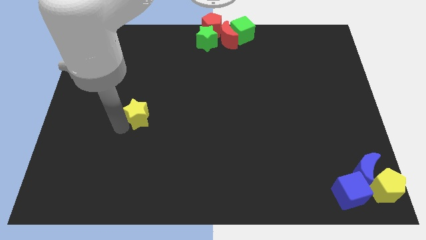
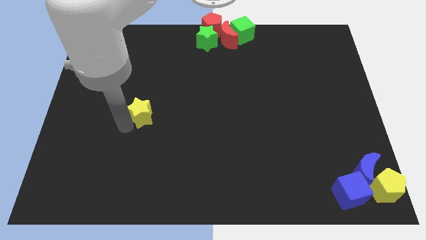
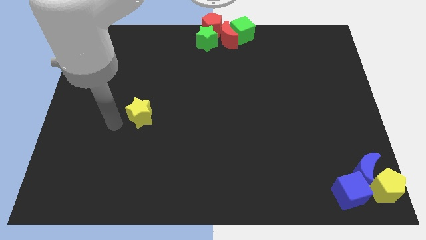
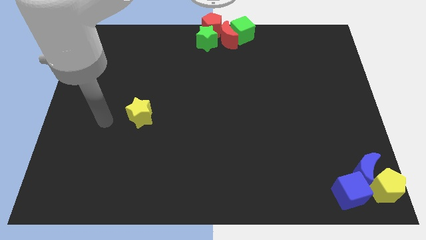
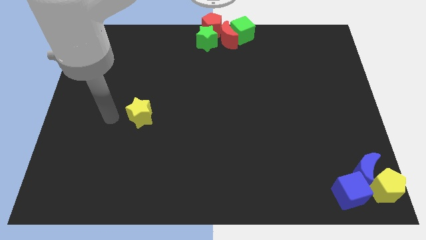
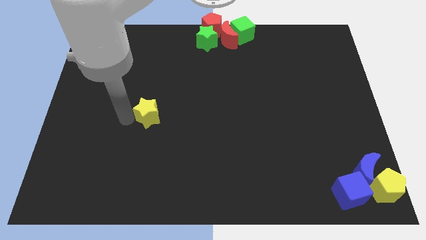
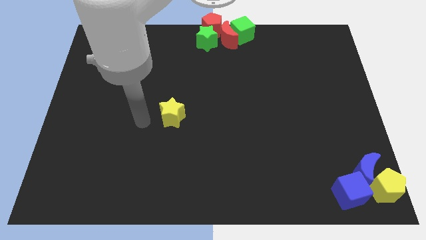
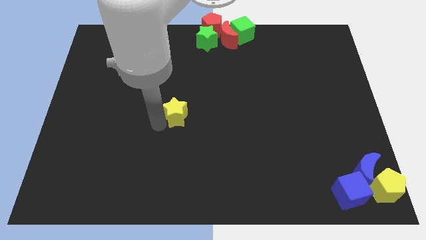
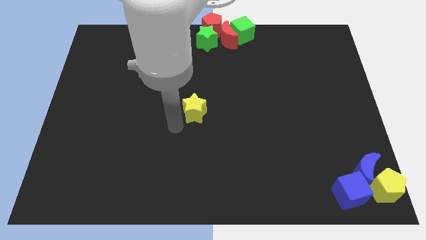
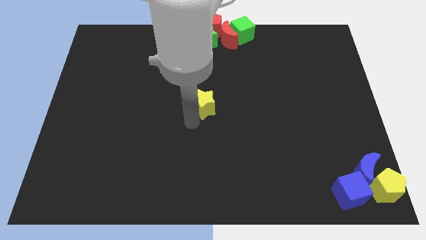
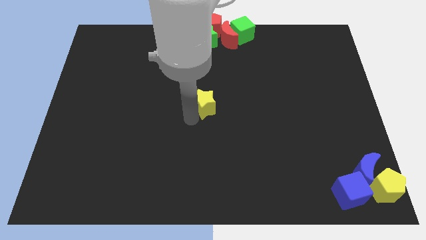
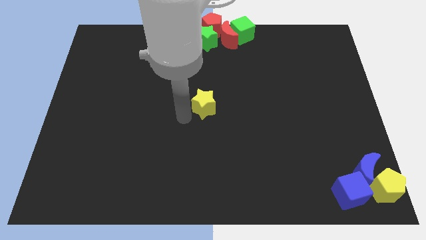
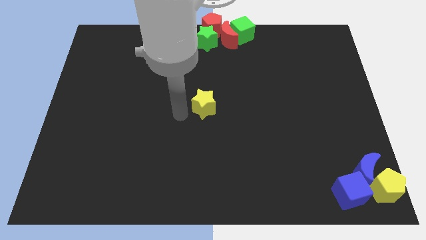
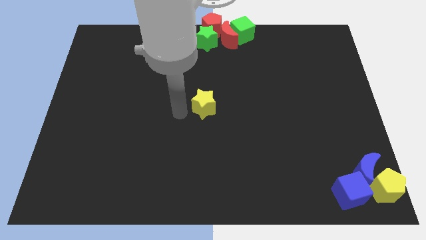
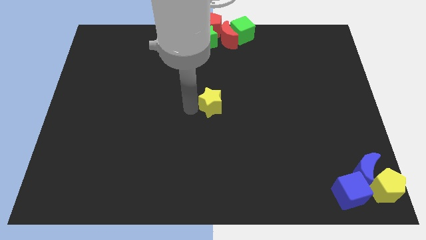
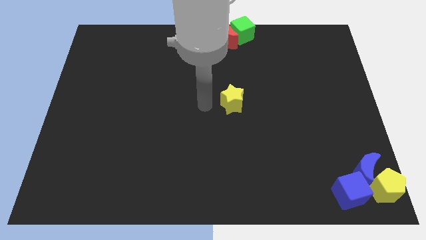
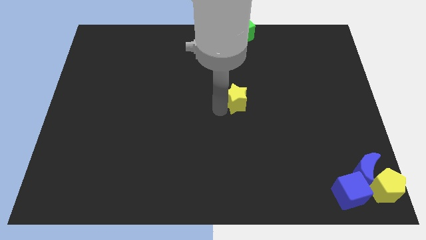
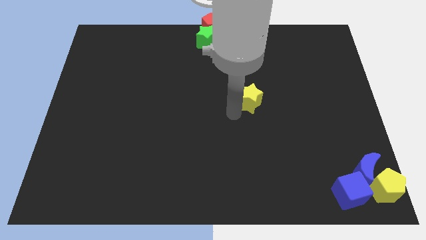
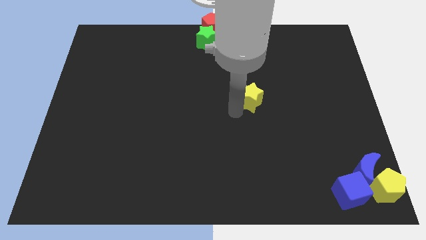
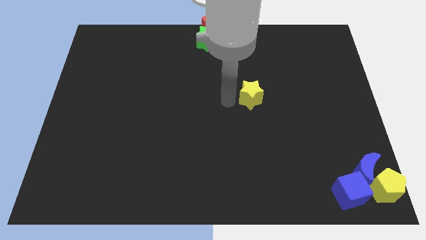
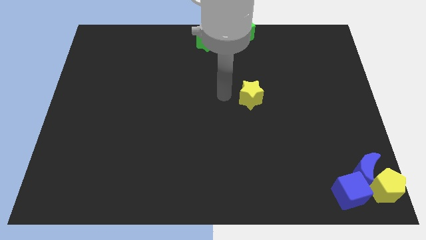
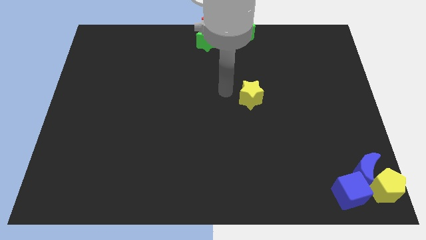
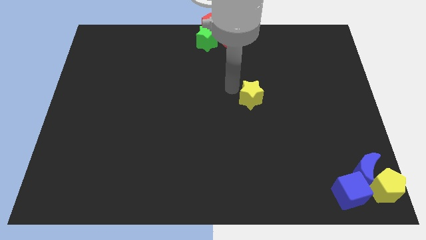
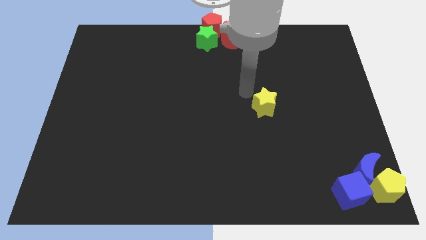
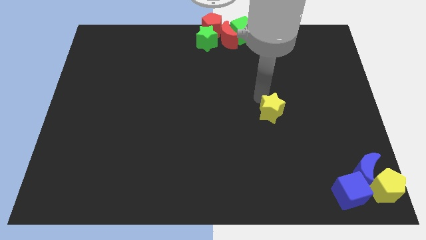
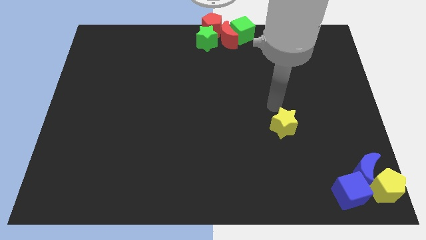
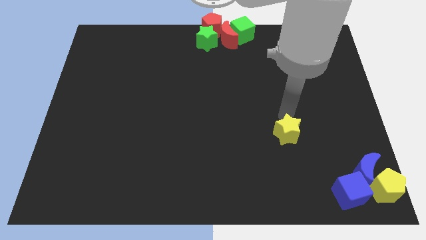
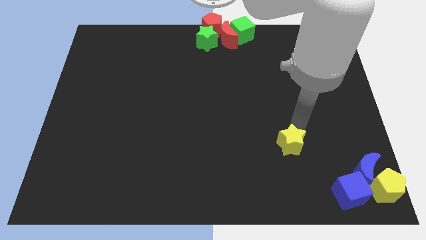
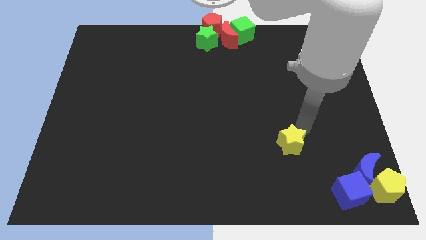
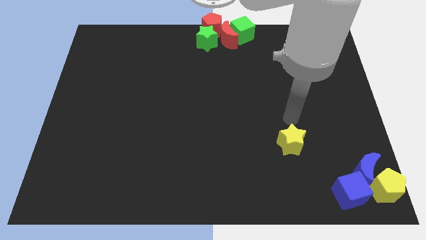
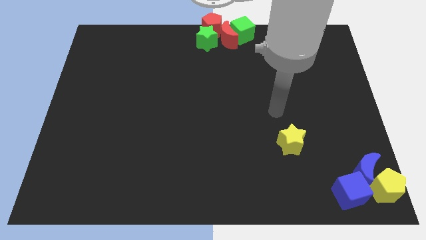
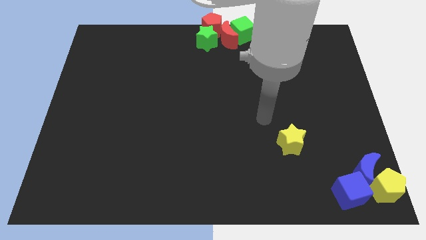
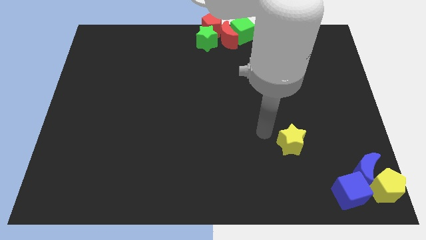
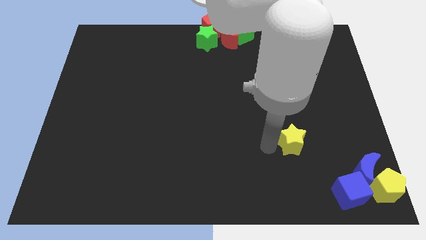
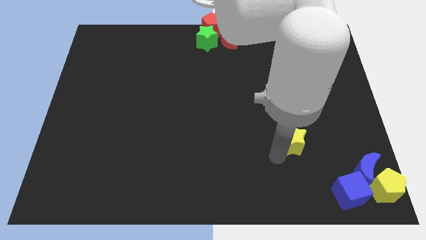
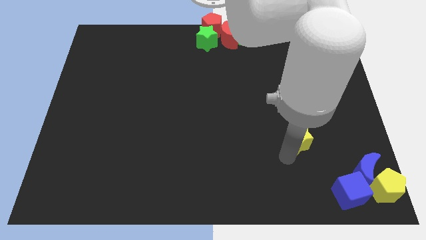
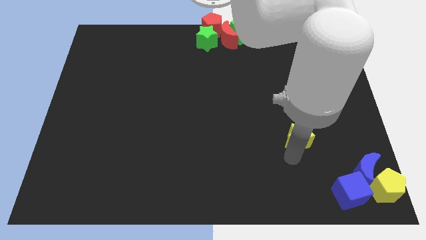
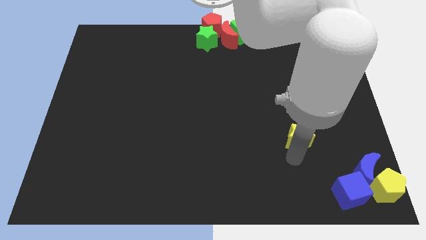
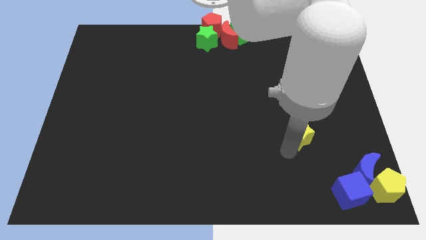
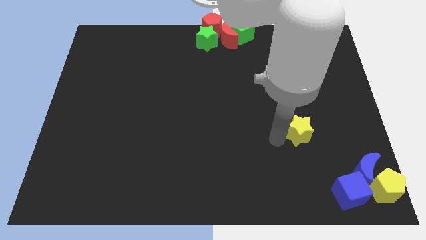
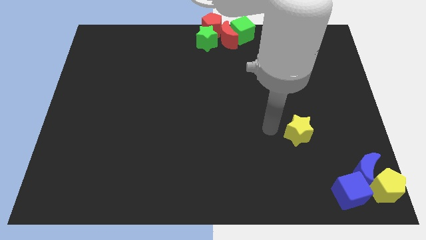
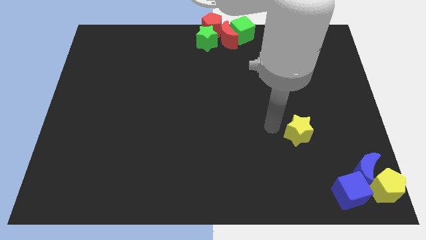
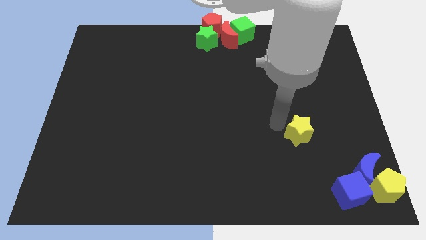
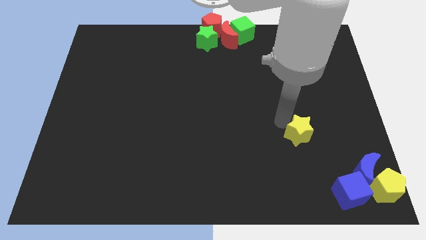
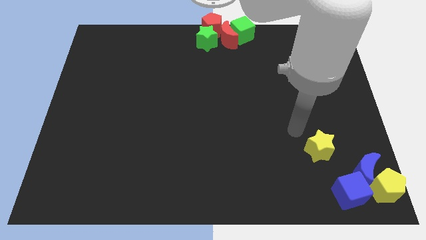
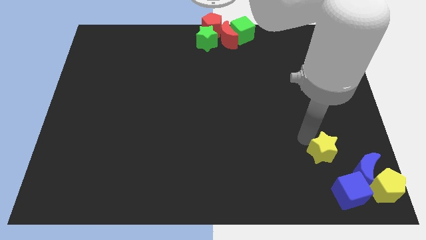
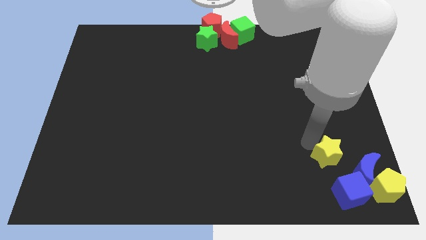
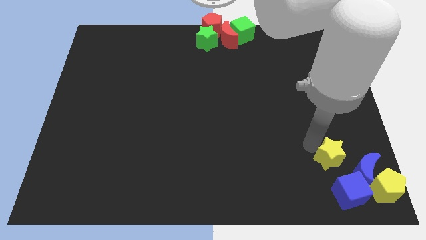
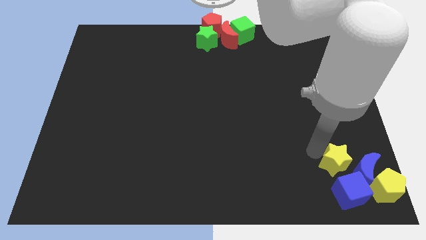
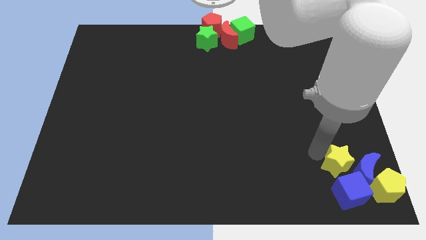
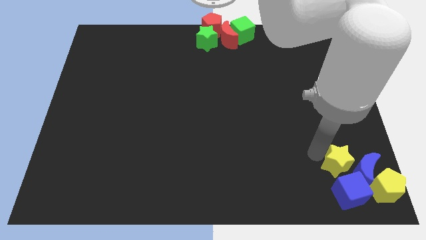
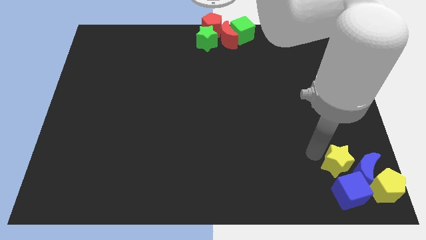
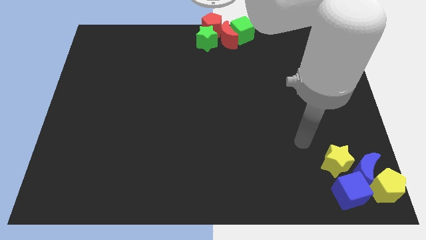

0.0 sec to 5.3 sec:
move yellow star near to blue crescent

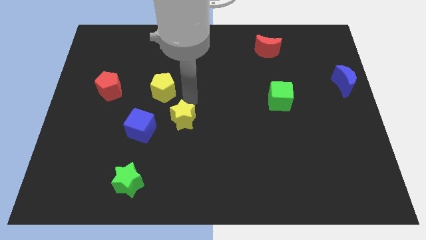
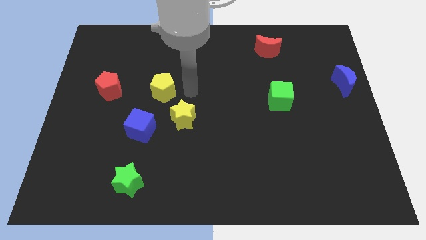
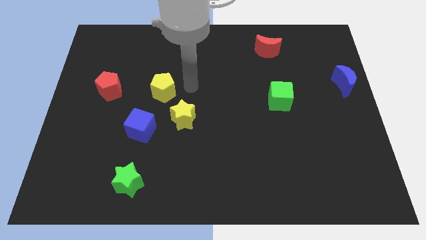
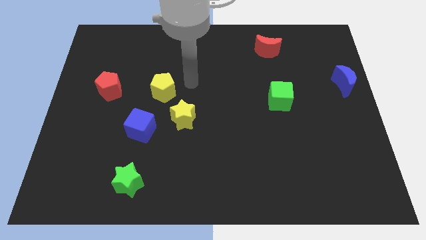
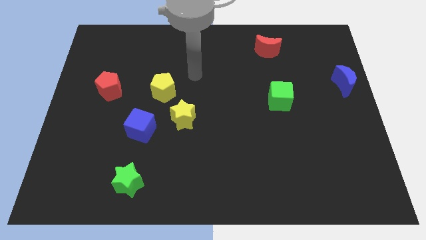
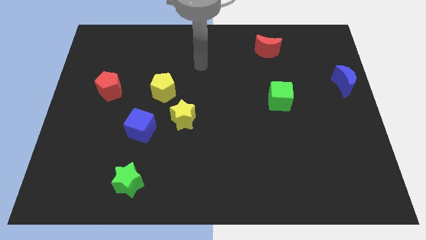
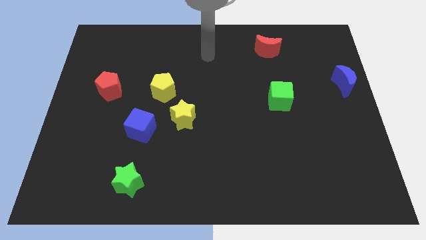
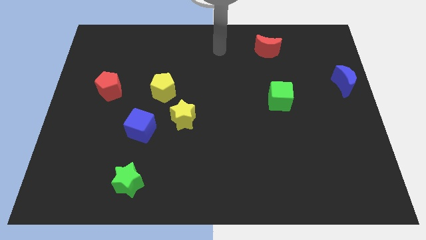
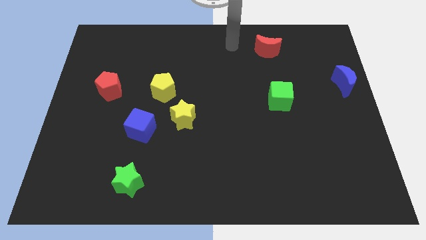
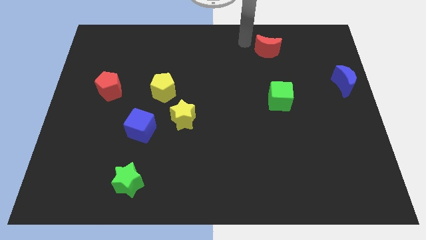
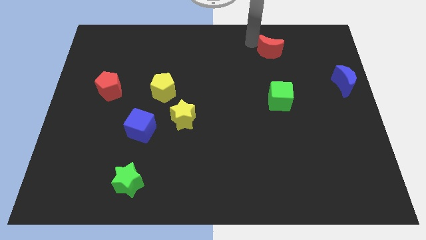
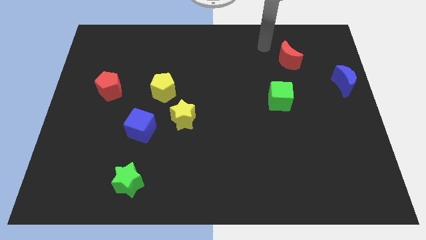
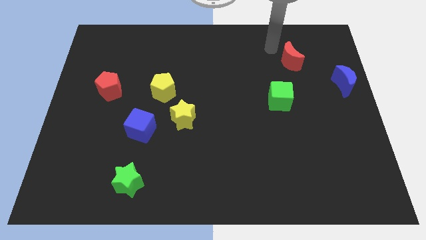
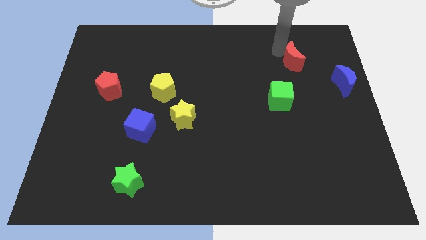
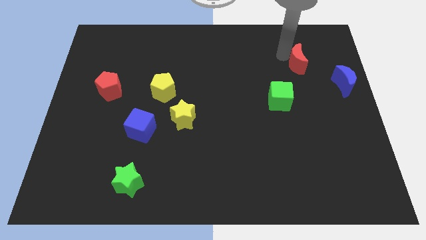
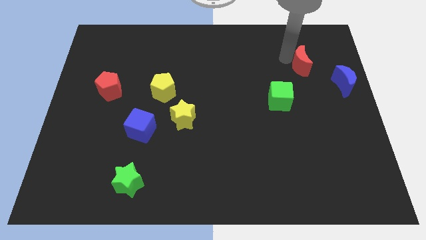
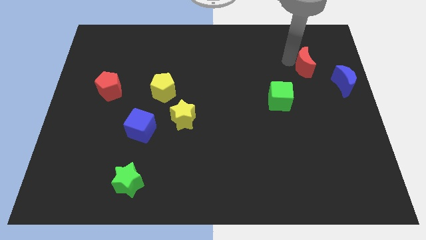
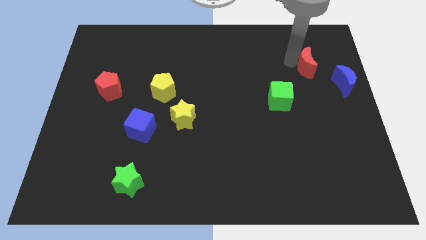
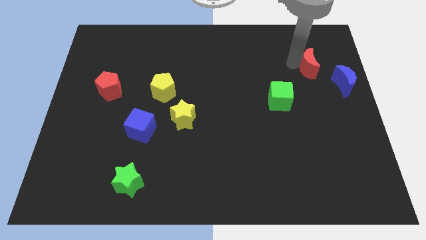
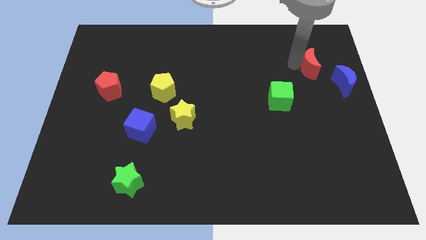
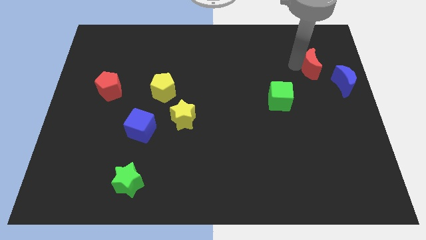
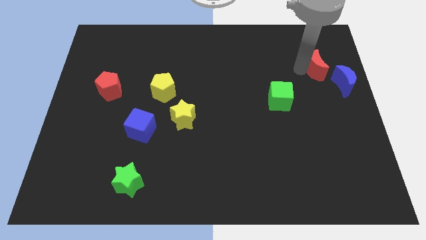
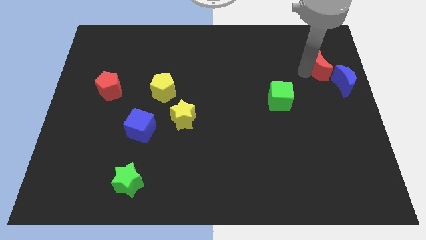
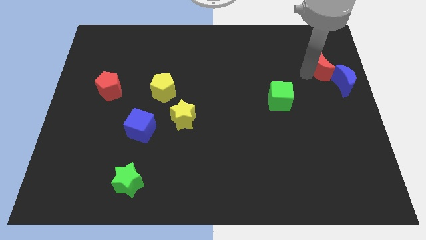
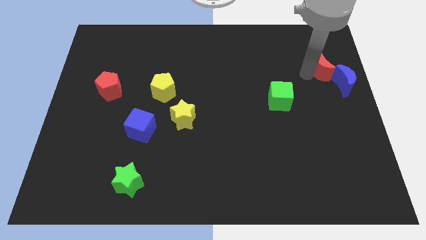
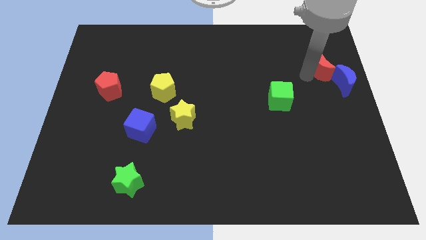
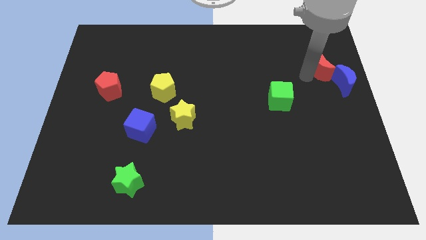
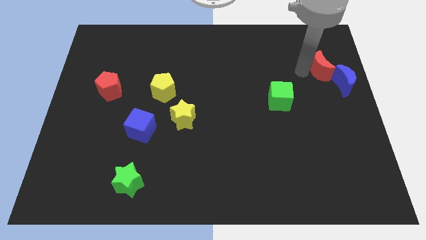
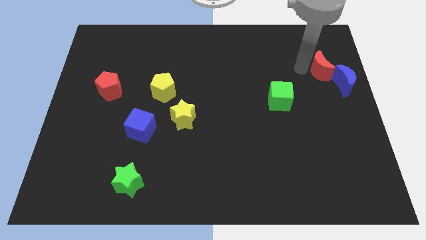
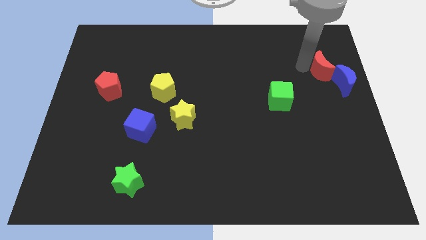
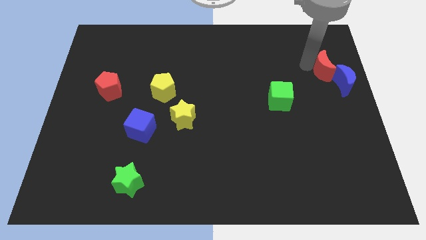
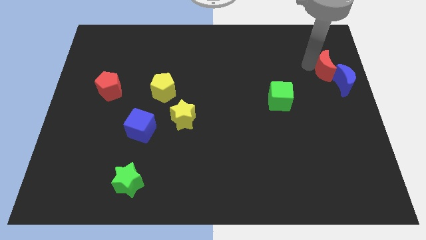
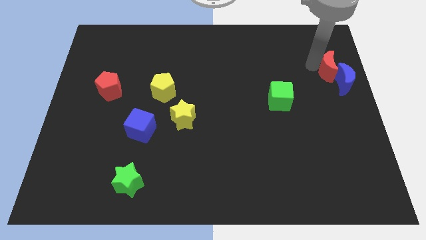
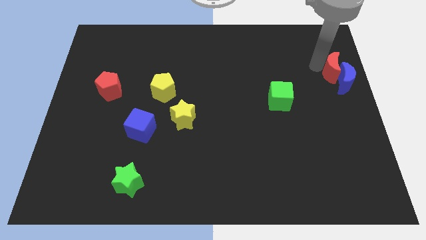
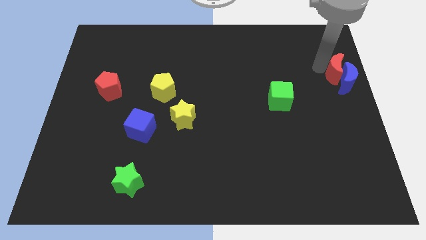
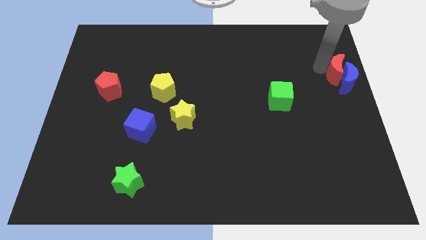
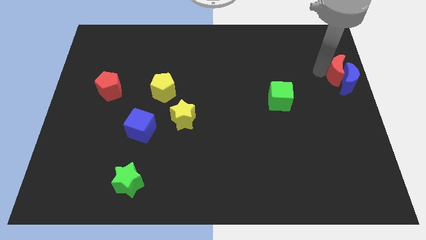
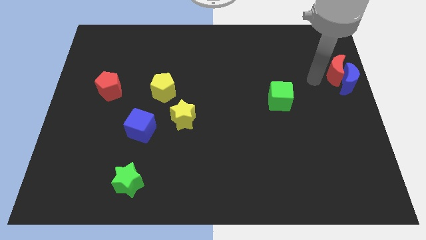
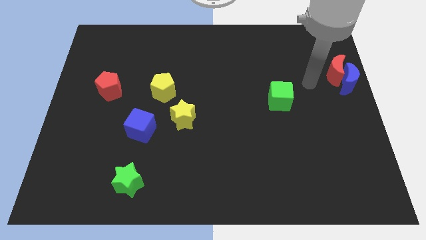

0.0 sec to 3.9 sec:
push the red crescent to the left of the blue crescent
